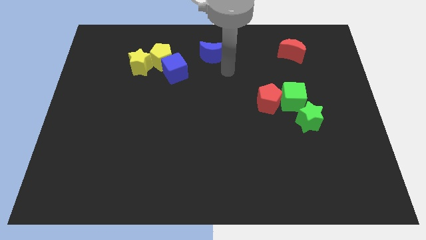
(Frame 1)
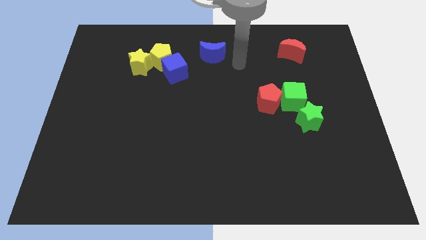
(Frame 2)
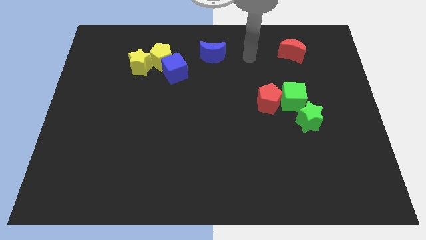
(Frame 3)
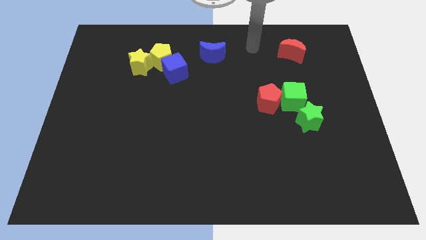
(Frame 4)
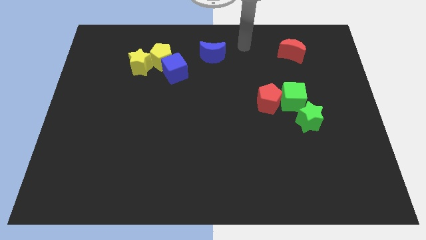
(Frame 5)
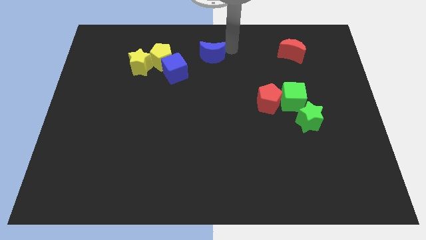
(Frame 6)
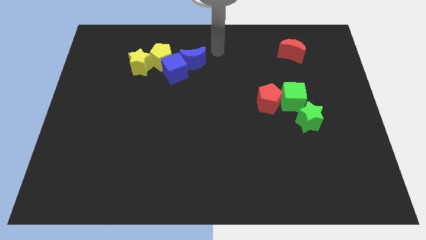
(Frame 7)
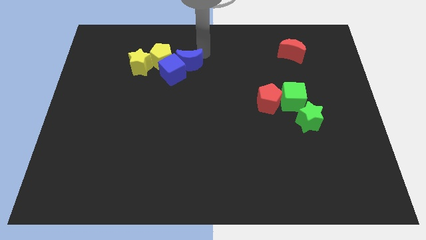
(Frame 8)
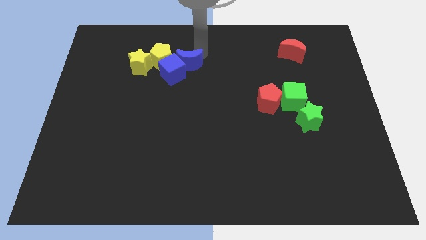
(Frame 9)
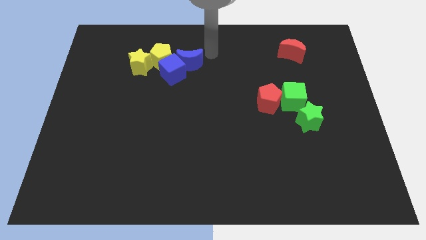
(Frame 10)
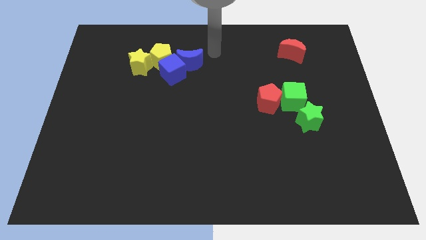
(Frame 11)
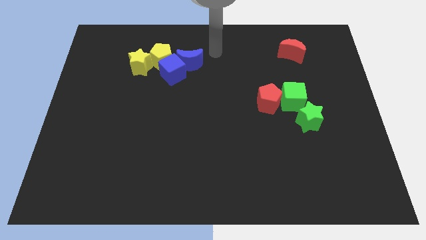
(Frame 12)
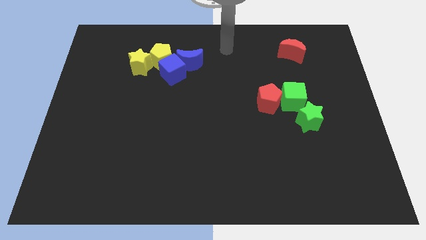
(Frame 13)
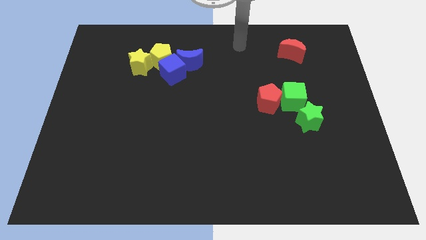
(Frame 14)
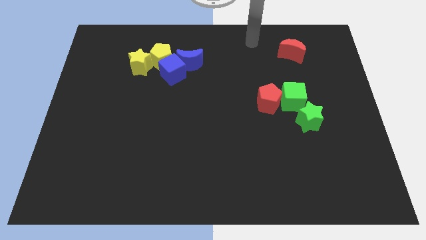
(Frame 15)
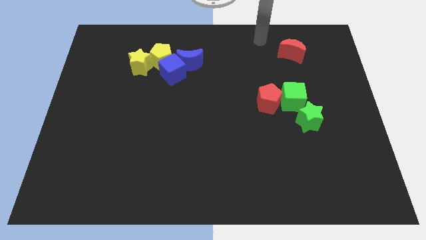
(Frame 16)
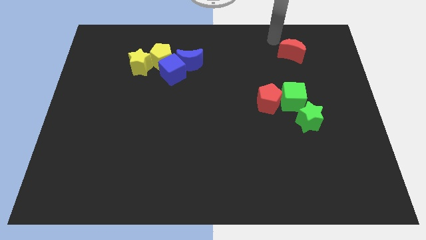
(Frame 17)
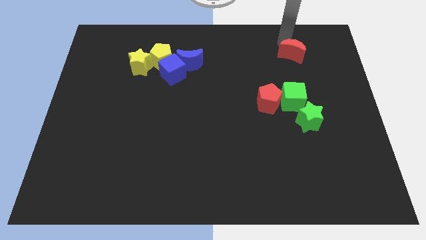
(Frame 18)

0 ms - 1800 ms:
push the blue crescent into the blue cube

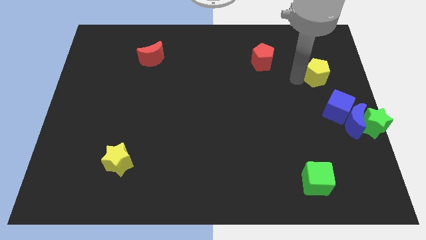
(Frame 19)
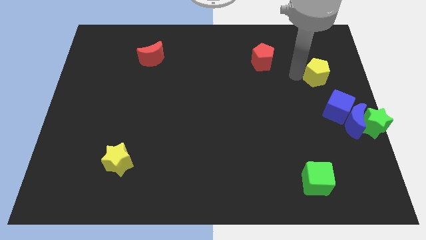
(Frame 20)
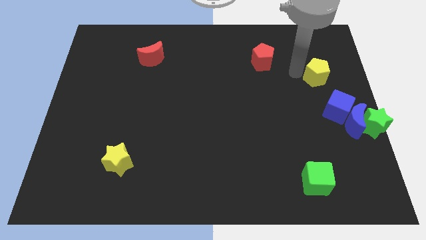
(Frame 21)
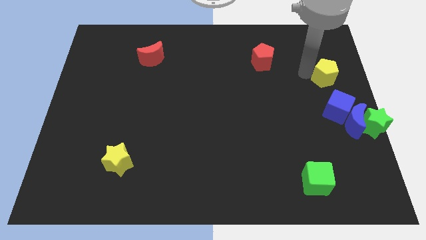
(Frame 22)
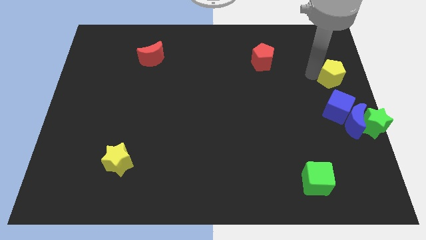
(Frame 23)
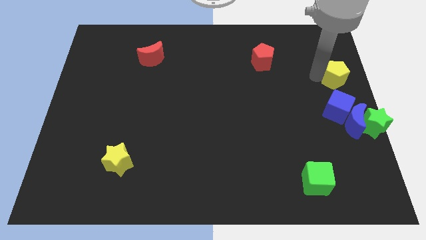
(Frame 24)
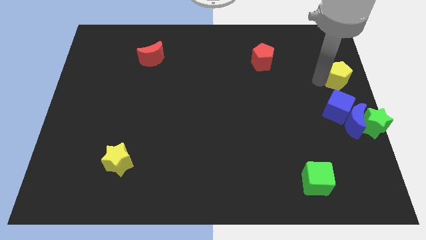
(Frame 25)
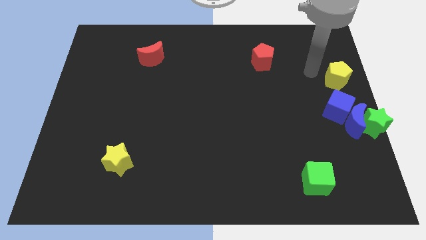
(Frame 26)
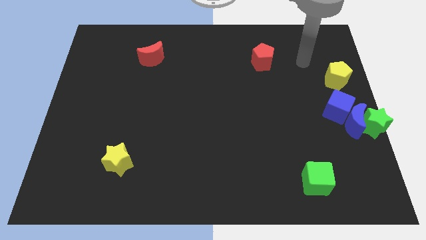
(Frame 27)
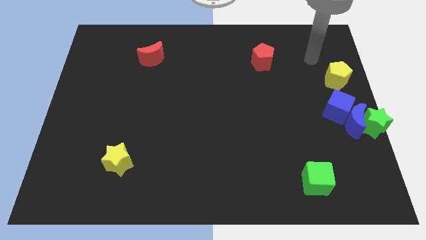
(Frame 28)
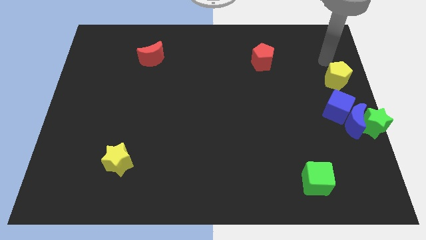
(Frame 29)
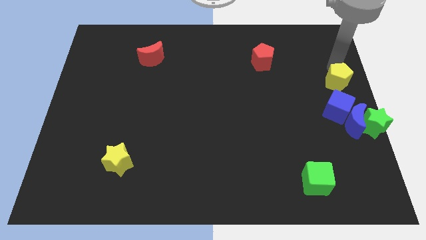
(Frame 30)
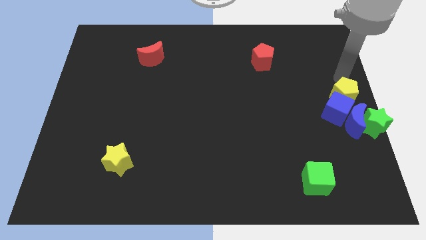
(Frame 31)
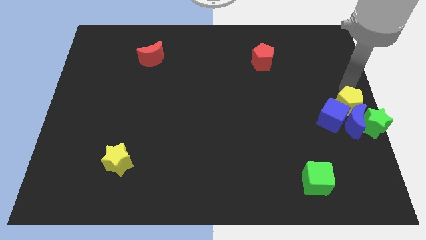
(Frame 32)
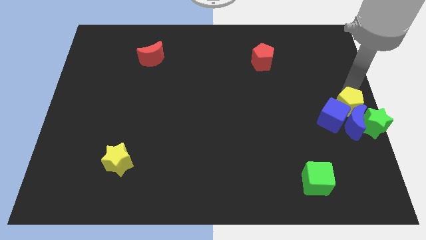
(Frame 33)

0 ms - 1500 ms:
push the yellow pentagon into the top side of two blue blocks

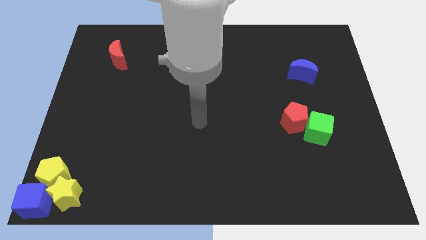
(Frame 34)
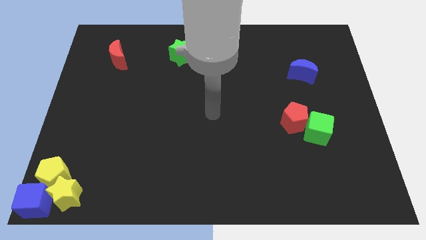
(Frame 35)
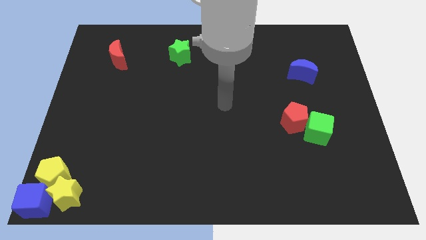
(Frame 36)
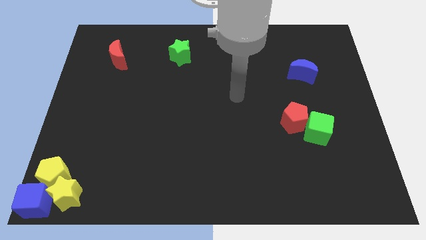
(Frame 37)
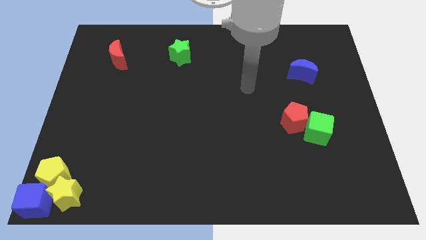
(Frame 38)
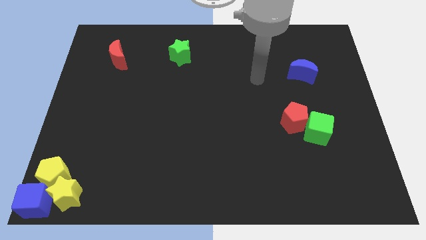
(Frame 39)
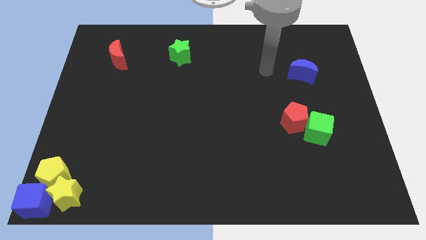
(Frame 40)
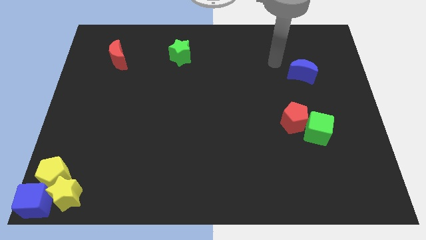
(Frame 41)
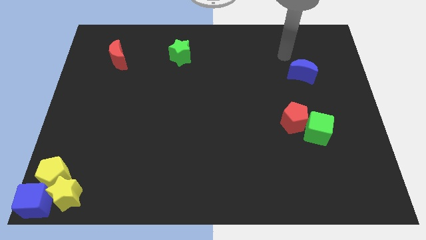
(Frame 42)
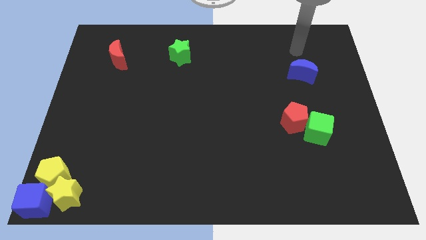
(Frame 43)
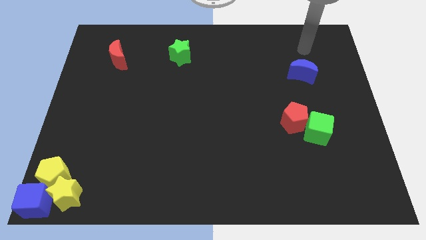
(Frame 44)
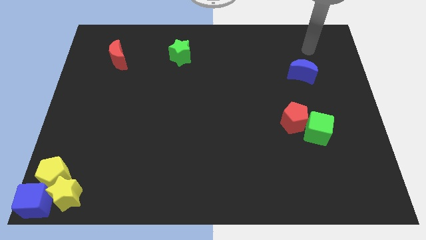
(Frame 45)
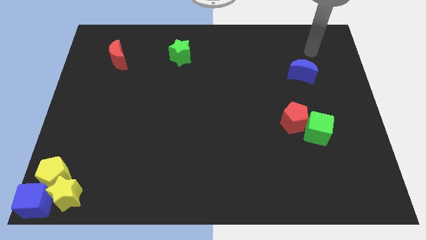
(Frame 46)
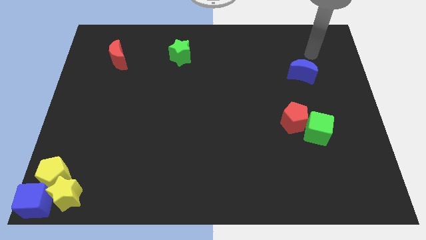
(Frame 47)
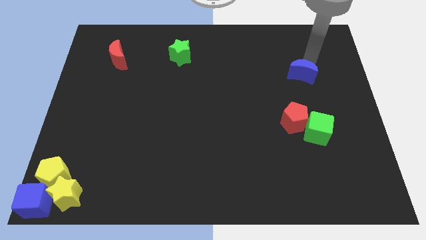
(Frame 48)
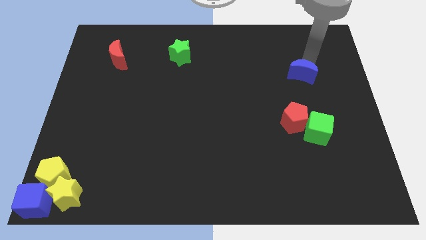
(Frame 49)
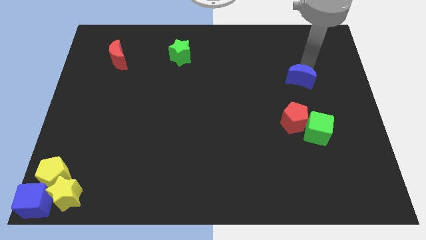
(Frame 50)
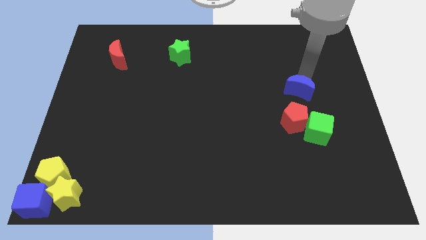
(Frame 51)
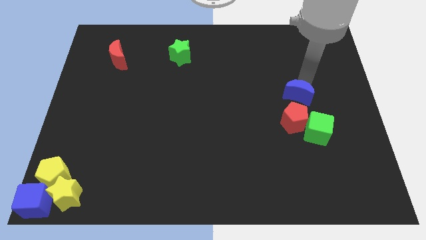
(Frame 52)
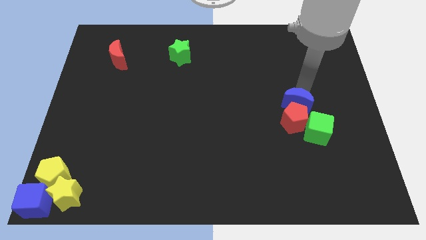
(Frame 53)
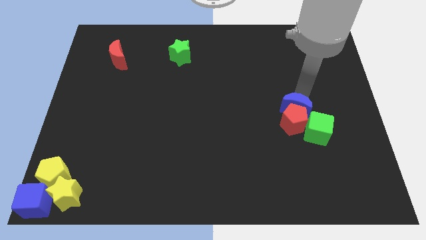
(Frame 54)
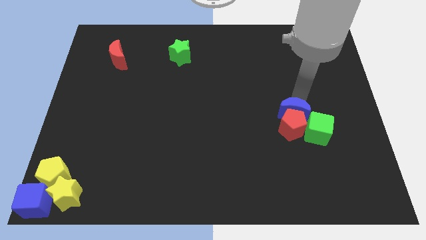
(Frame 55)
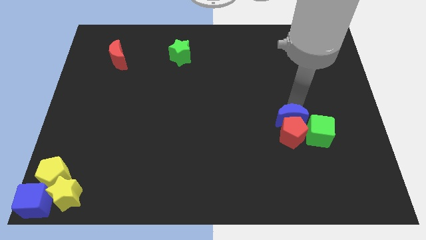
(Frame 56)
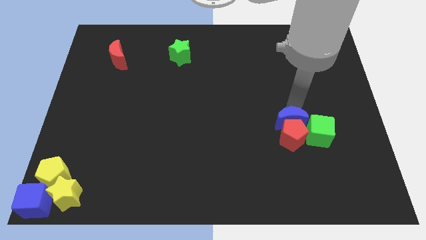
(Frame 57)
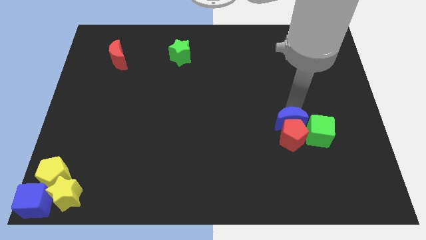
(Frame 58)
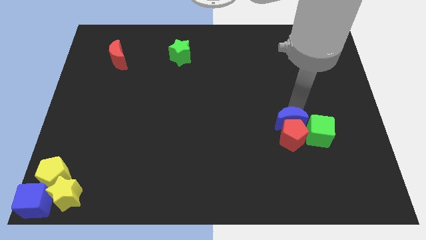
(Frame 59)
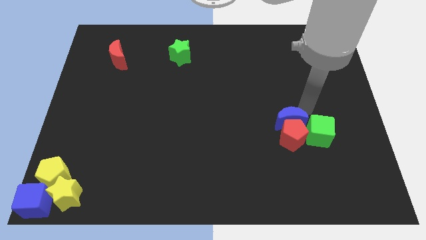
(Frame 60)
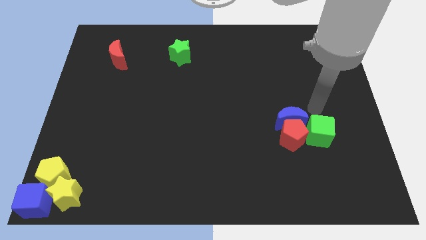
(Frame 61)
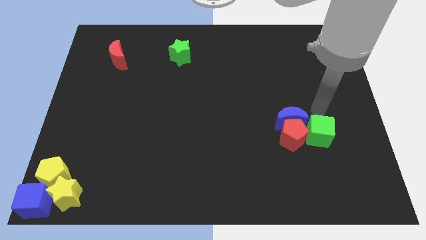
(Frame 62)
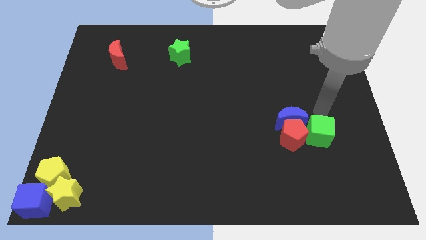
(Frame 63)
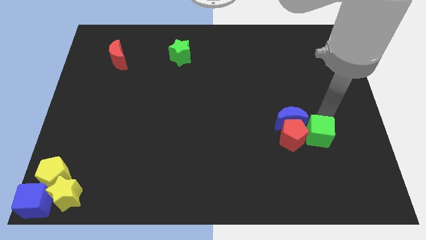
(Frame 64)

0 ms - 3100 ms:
move the blue moon into the red pentagon

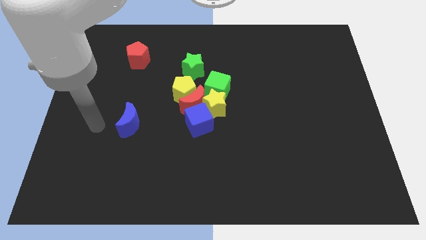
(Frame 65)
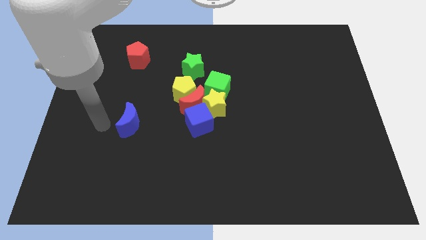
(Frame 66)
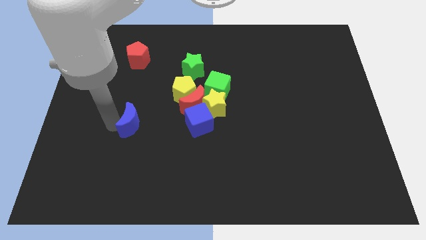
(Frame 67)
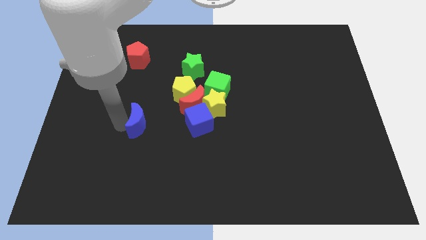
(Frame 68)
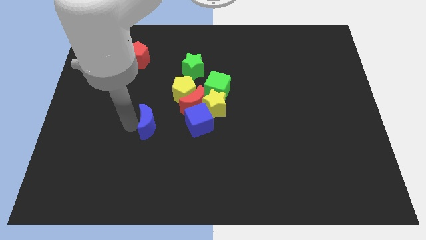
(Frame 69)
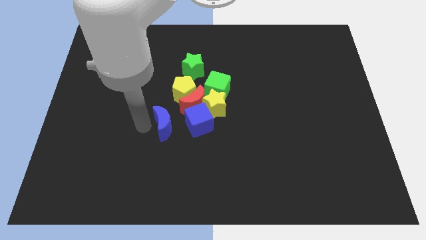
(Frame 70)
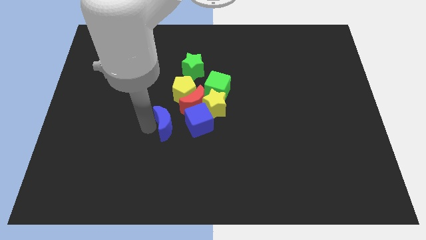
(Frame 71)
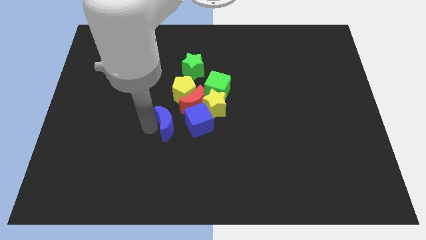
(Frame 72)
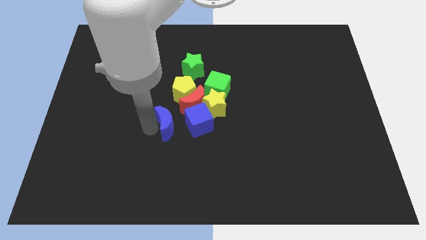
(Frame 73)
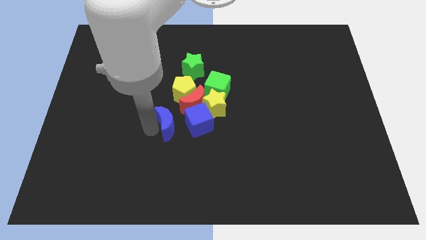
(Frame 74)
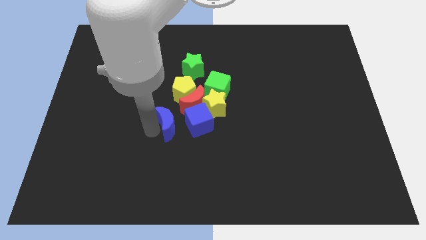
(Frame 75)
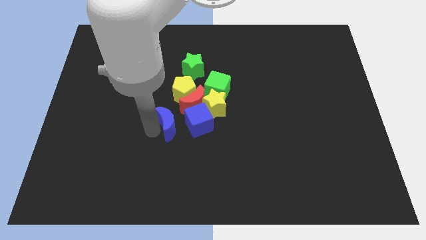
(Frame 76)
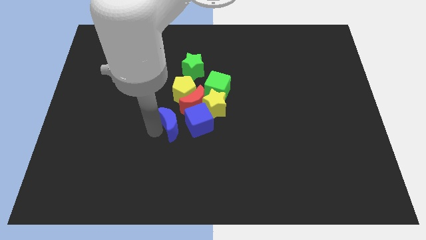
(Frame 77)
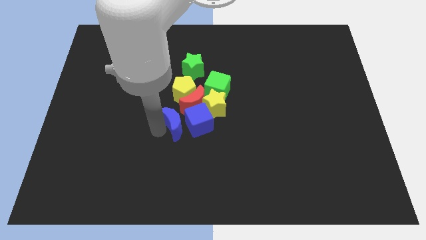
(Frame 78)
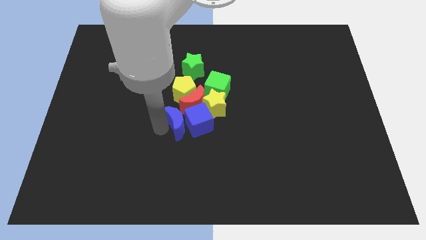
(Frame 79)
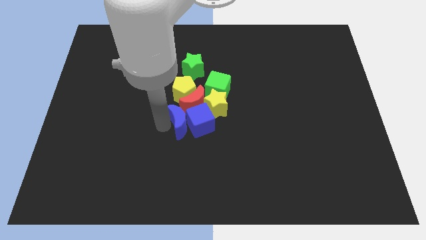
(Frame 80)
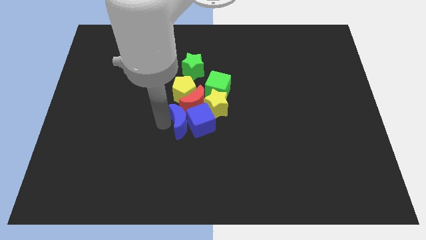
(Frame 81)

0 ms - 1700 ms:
slide the blue crescent into the left side of the blue cube

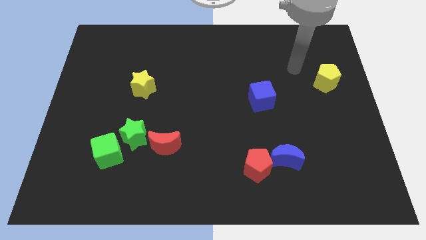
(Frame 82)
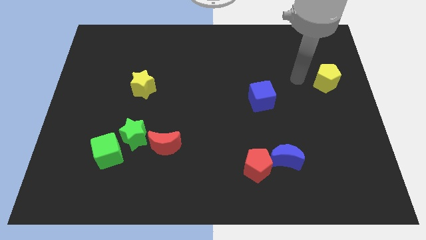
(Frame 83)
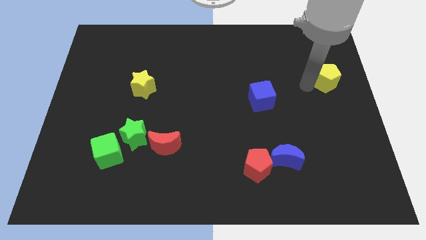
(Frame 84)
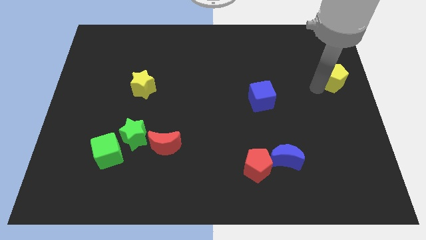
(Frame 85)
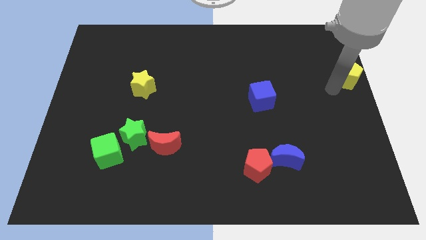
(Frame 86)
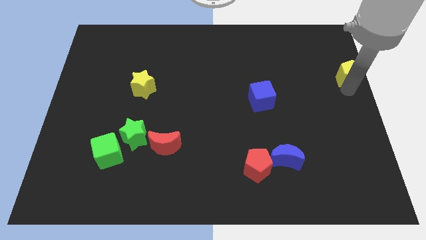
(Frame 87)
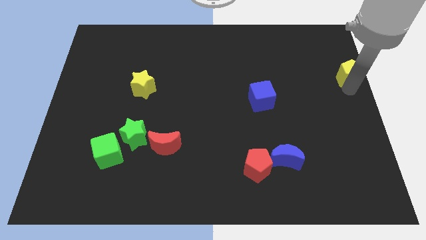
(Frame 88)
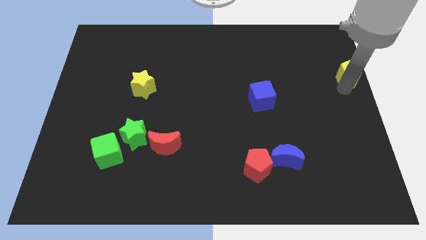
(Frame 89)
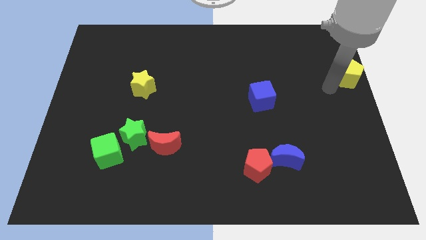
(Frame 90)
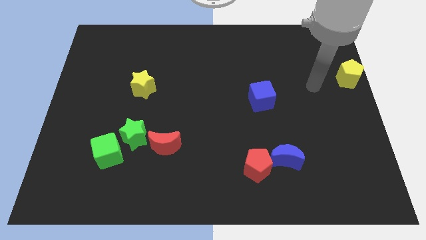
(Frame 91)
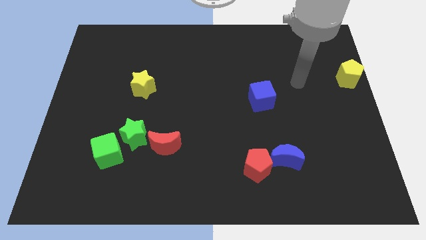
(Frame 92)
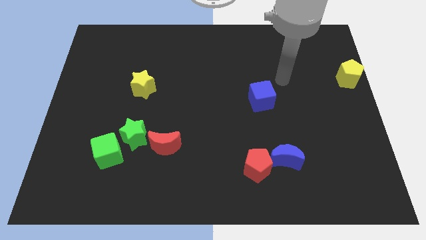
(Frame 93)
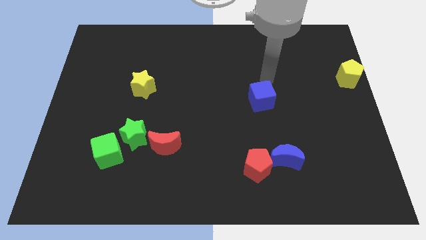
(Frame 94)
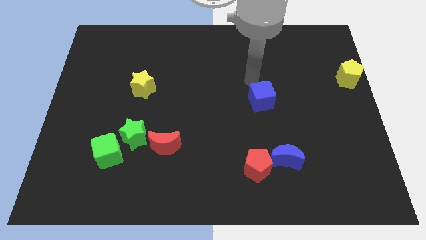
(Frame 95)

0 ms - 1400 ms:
move the yellow pentagon towards the right side of the board
